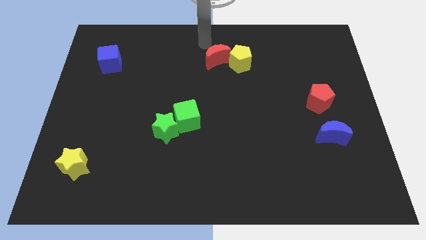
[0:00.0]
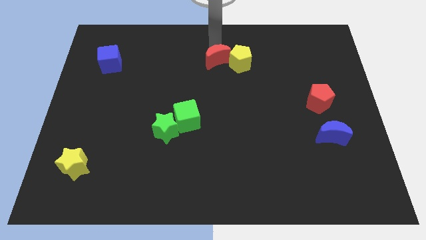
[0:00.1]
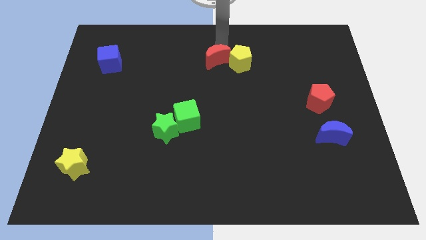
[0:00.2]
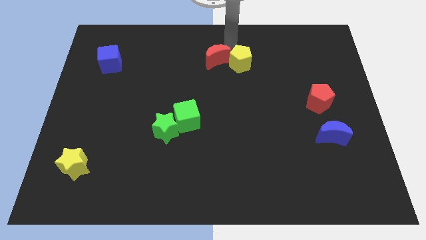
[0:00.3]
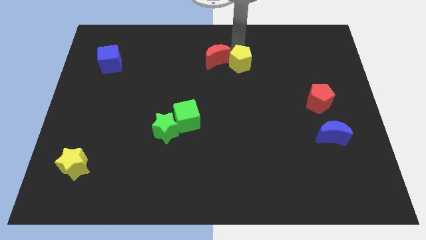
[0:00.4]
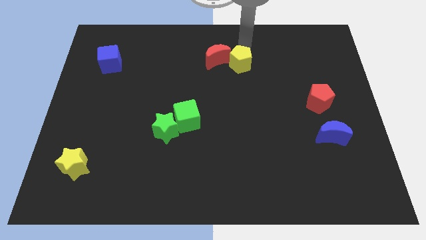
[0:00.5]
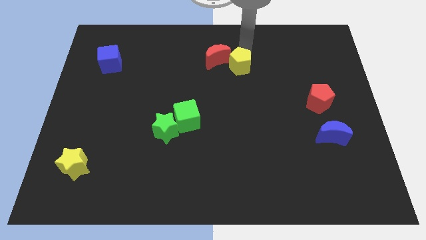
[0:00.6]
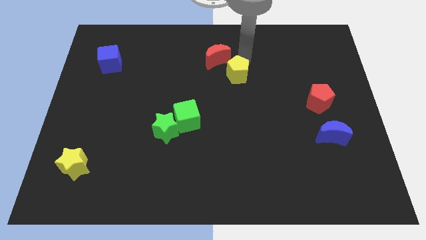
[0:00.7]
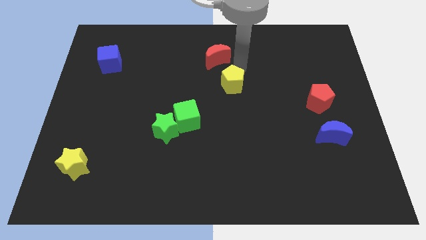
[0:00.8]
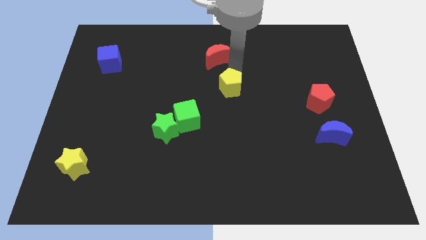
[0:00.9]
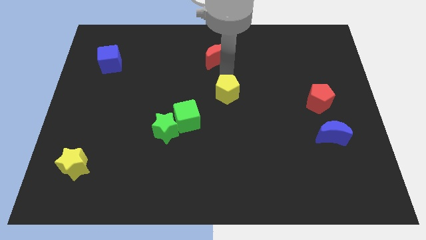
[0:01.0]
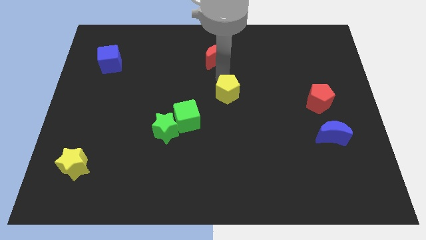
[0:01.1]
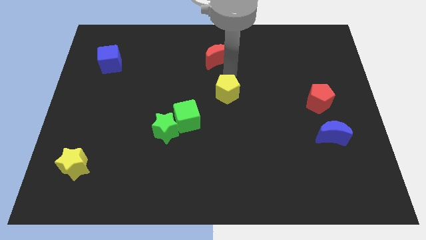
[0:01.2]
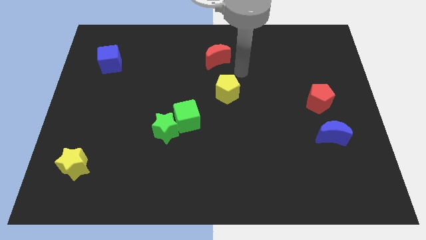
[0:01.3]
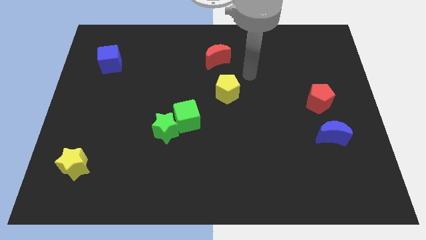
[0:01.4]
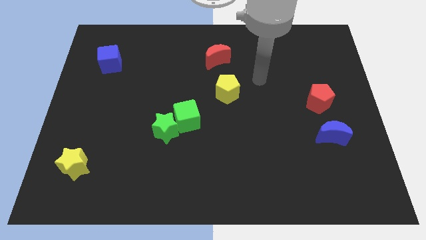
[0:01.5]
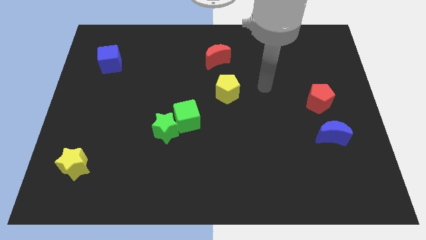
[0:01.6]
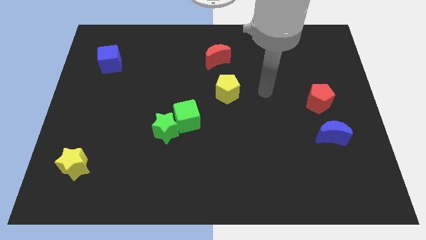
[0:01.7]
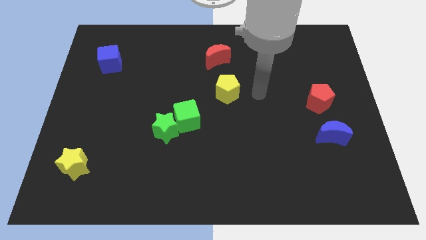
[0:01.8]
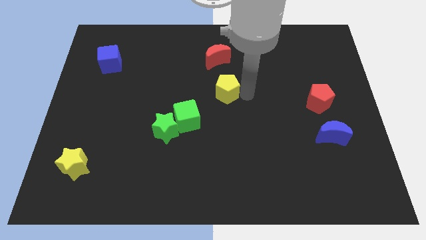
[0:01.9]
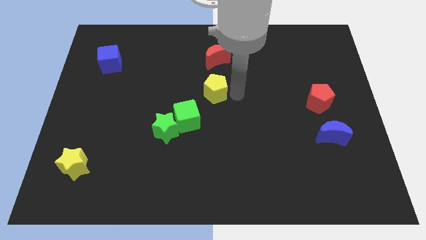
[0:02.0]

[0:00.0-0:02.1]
place yellow pentagon below red moon

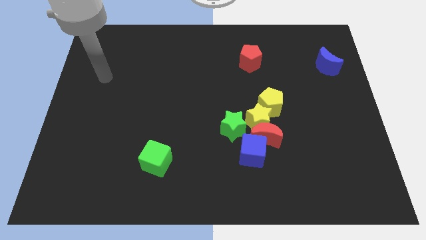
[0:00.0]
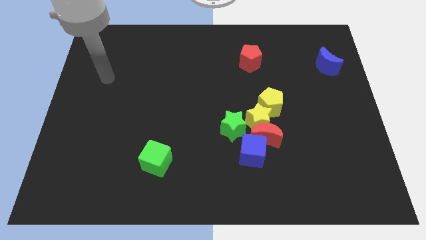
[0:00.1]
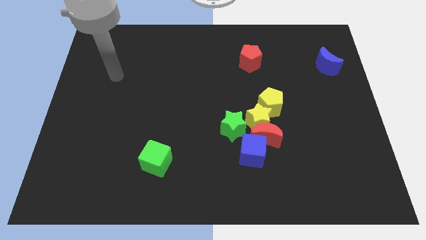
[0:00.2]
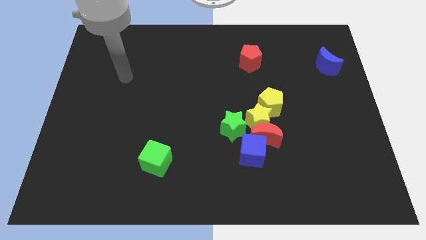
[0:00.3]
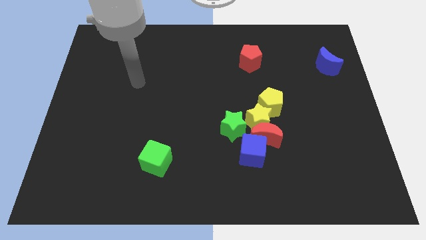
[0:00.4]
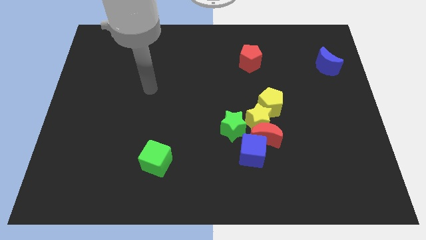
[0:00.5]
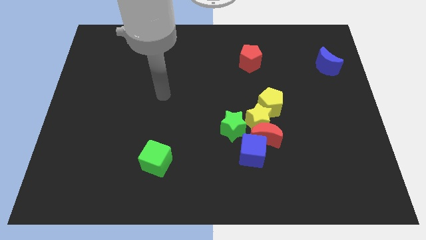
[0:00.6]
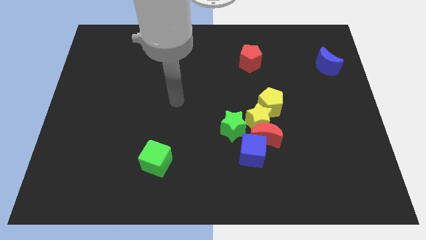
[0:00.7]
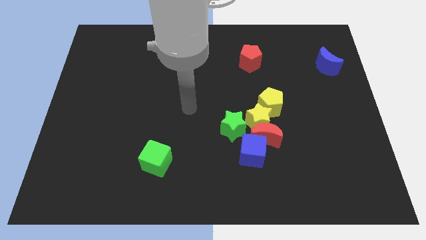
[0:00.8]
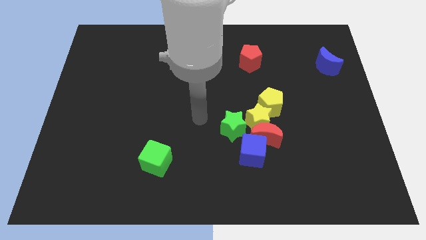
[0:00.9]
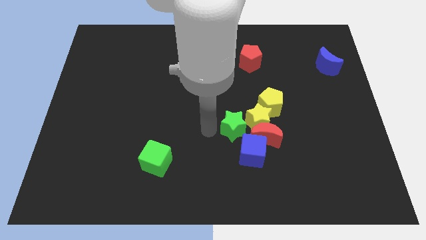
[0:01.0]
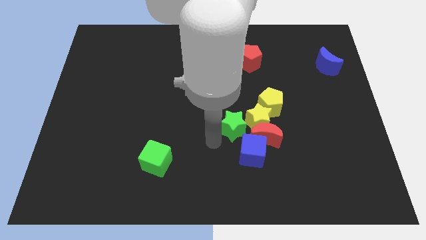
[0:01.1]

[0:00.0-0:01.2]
move the arm towards the green star

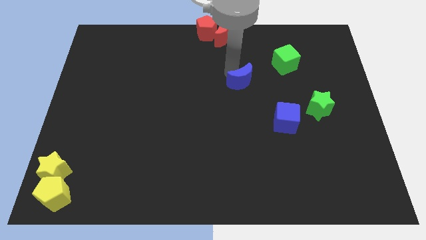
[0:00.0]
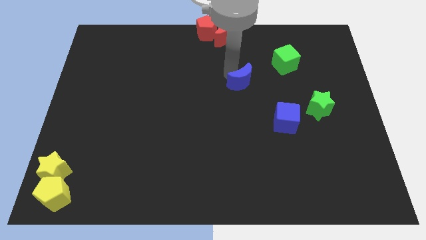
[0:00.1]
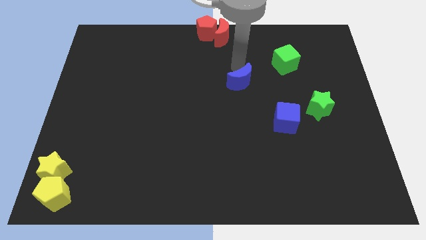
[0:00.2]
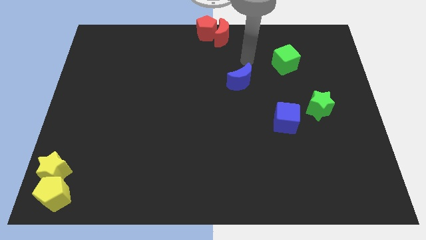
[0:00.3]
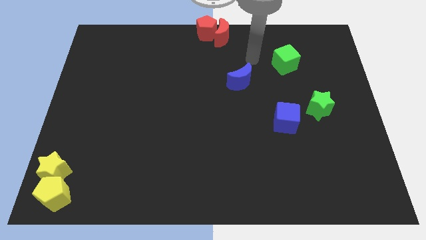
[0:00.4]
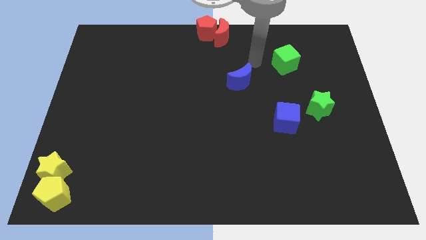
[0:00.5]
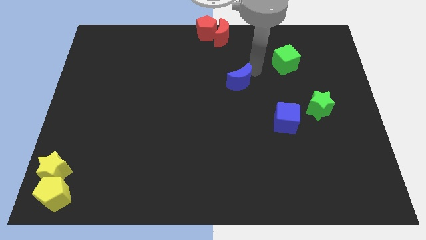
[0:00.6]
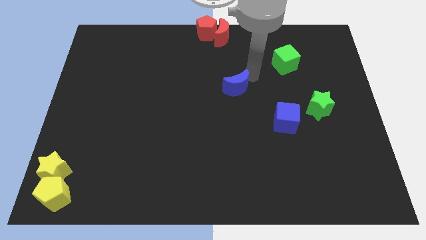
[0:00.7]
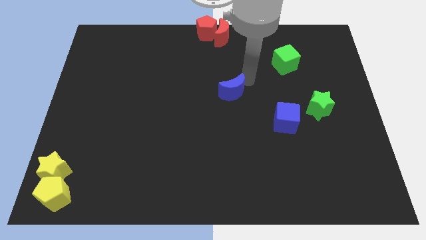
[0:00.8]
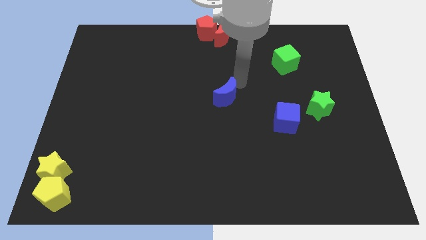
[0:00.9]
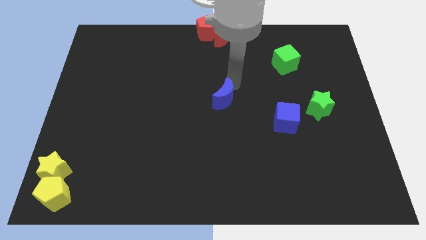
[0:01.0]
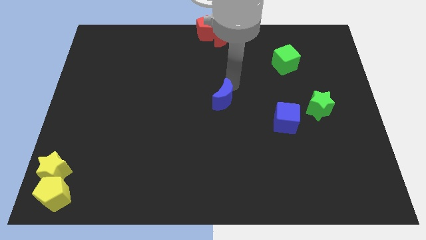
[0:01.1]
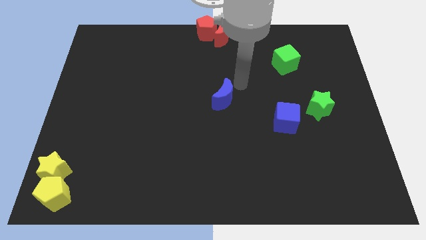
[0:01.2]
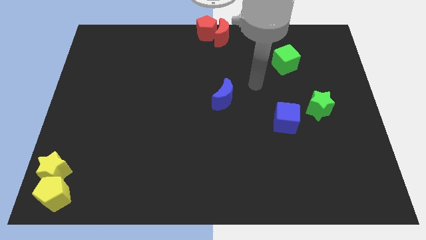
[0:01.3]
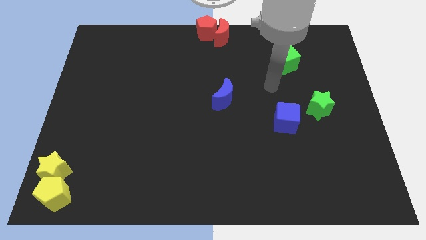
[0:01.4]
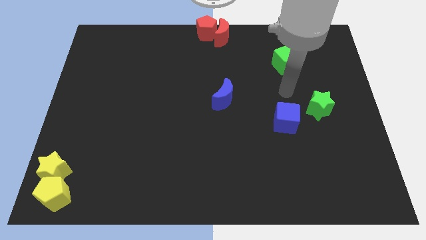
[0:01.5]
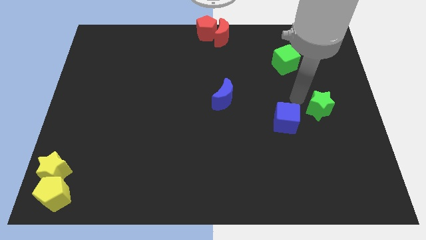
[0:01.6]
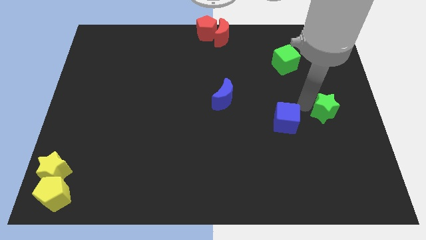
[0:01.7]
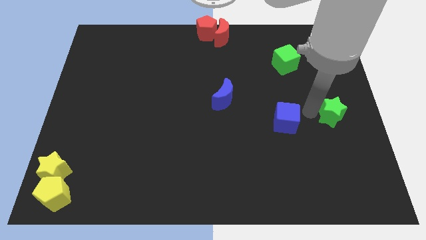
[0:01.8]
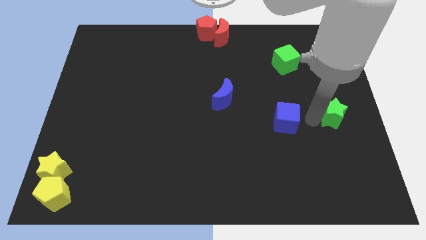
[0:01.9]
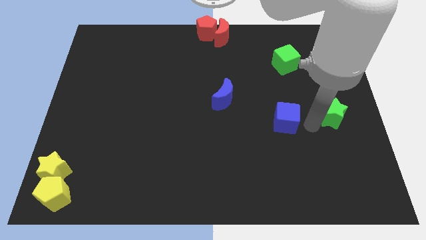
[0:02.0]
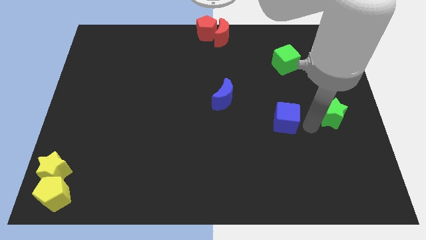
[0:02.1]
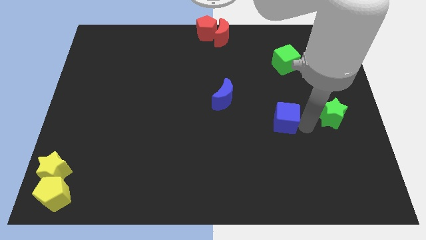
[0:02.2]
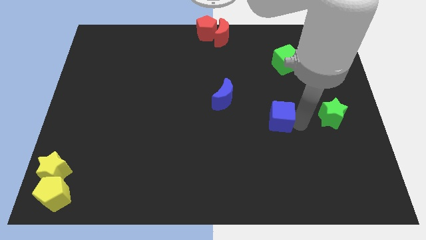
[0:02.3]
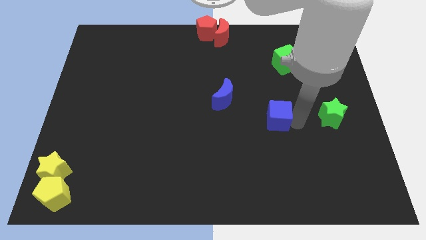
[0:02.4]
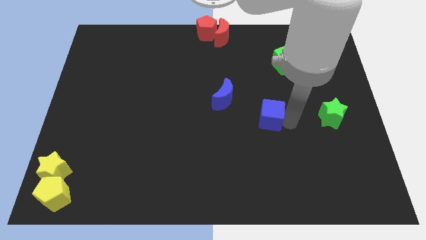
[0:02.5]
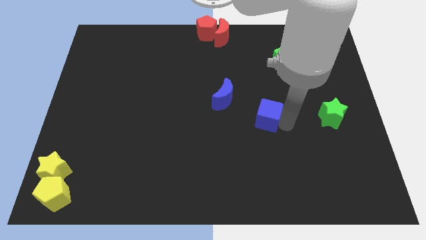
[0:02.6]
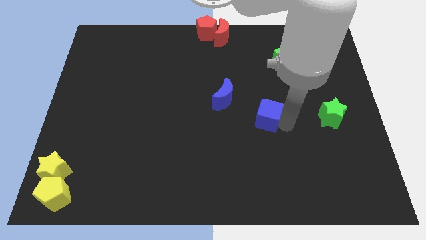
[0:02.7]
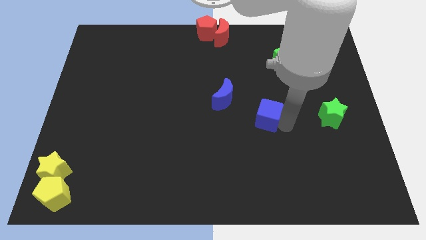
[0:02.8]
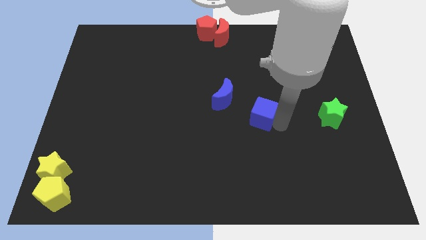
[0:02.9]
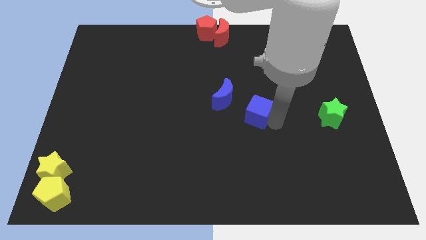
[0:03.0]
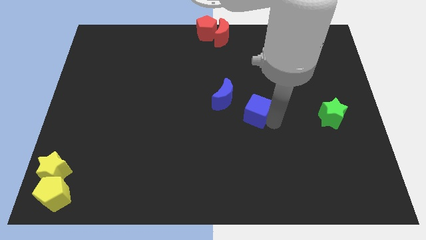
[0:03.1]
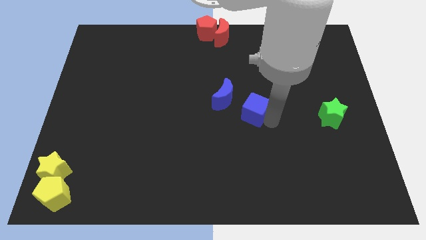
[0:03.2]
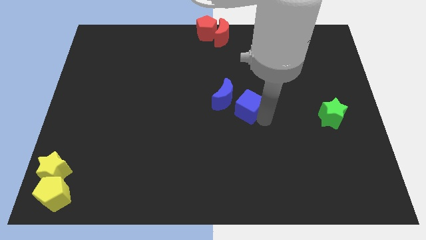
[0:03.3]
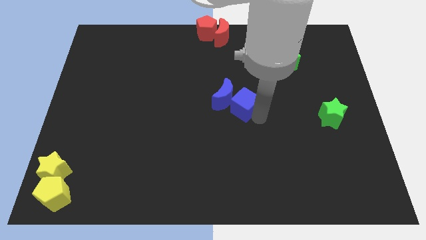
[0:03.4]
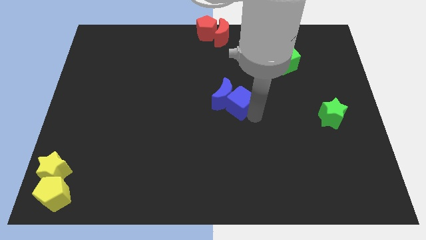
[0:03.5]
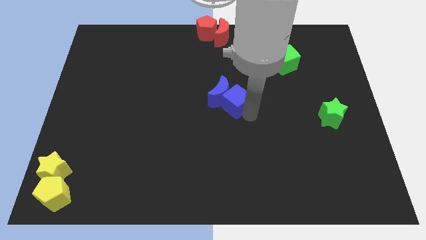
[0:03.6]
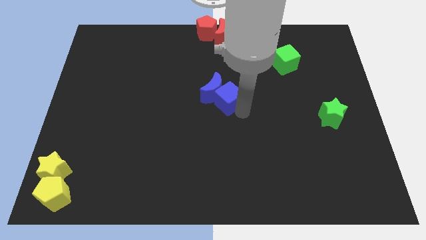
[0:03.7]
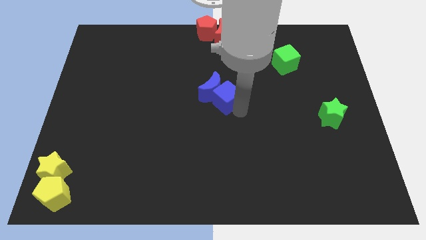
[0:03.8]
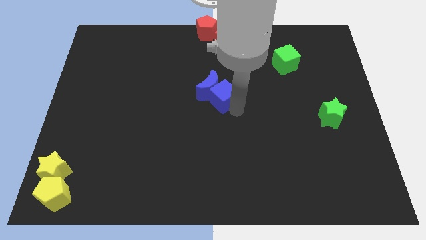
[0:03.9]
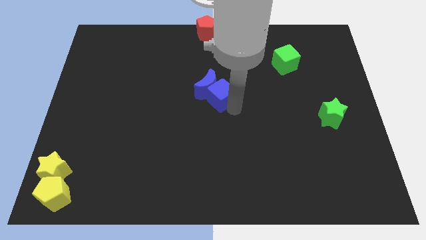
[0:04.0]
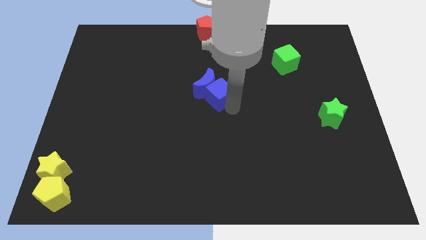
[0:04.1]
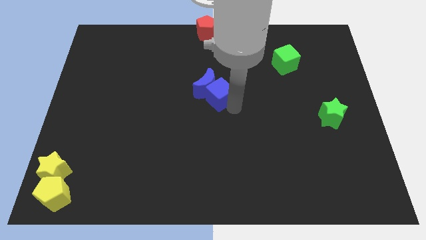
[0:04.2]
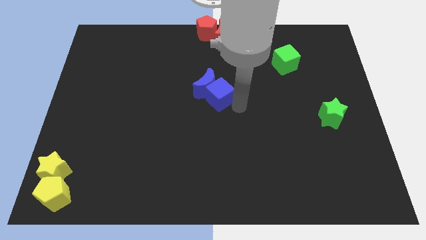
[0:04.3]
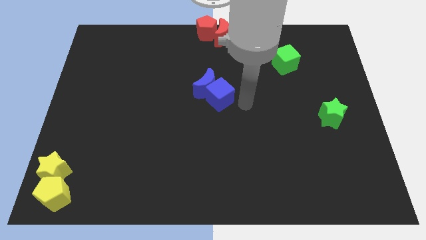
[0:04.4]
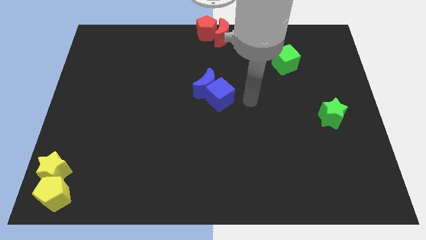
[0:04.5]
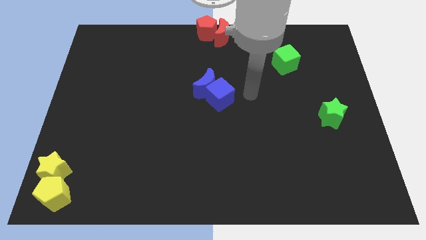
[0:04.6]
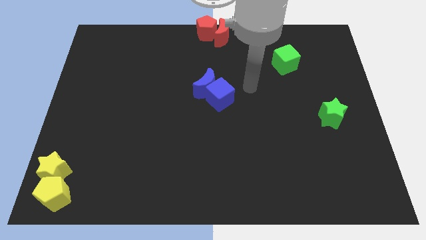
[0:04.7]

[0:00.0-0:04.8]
slide the blue cube into the blue crescent

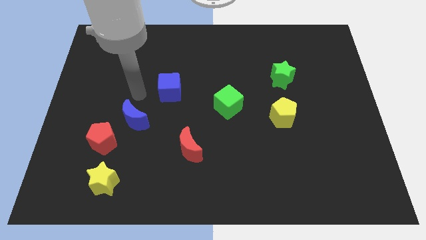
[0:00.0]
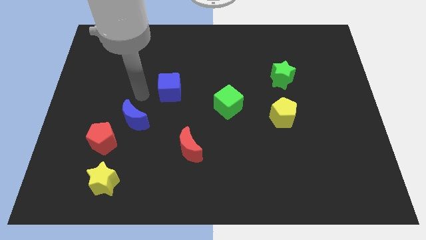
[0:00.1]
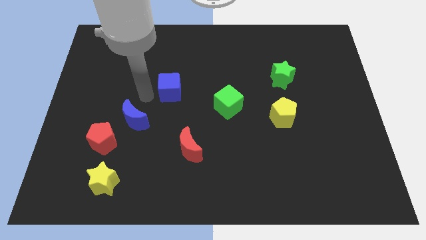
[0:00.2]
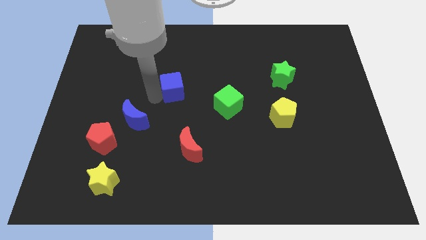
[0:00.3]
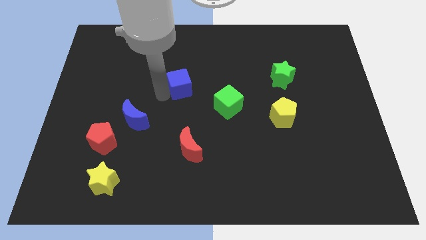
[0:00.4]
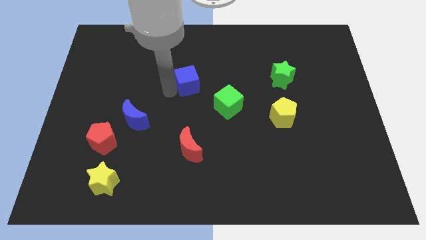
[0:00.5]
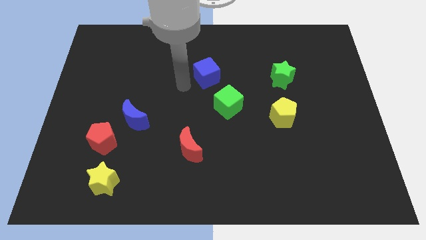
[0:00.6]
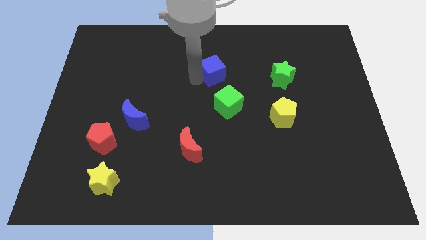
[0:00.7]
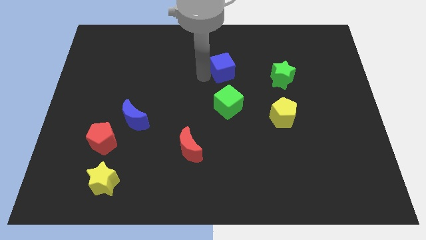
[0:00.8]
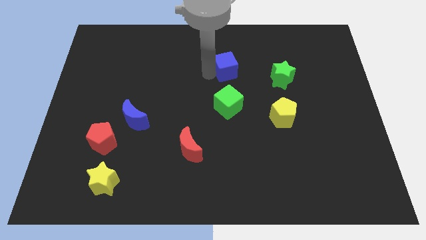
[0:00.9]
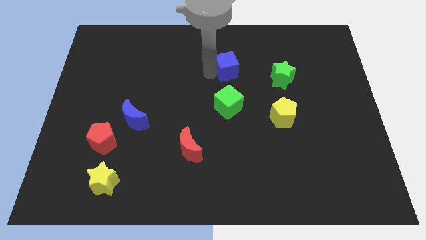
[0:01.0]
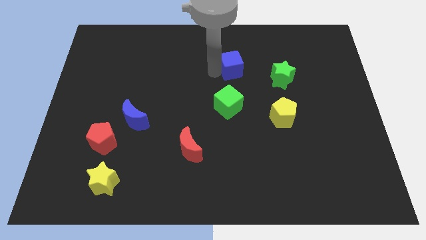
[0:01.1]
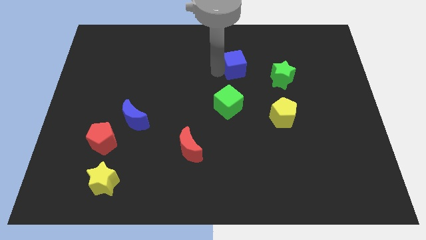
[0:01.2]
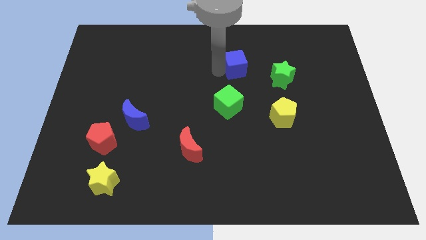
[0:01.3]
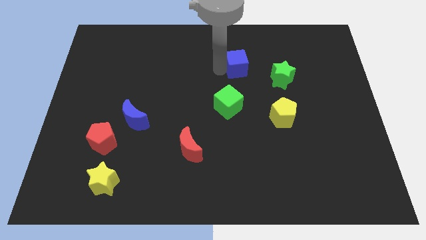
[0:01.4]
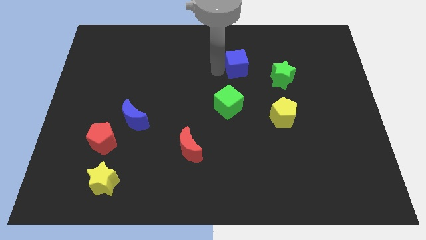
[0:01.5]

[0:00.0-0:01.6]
push the blue cube to the its right towards the green star
